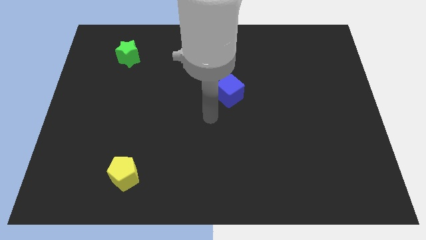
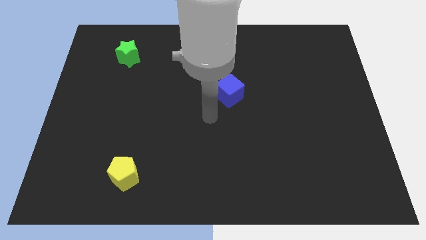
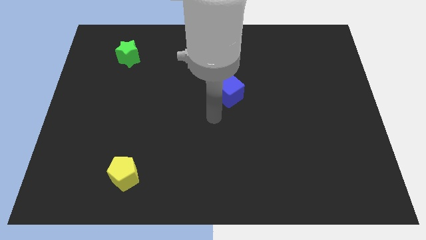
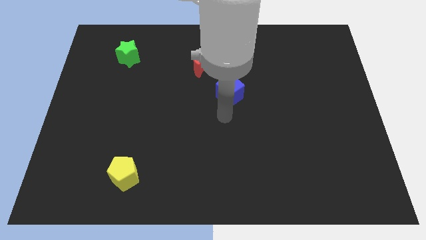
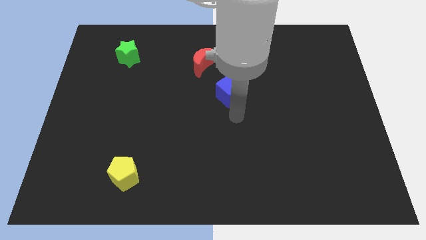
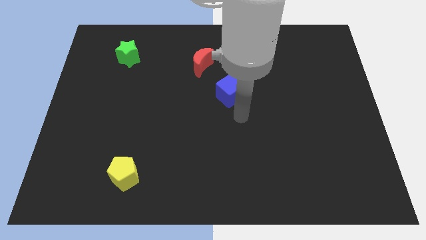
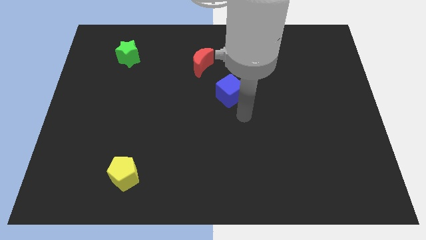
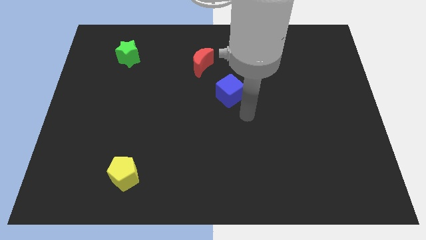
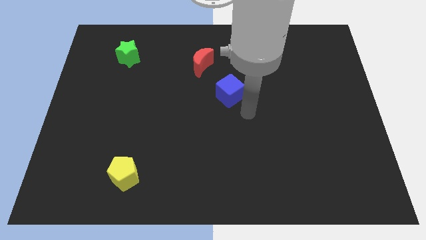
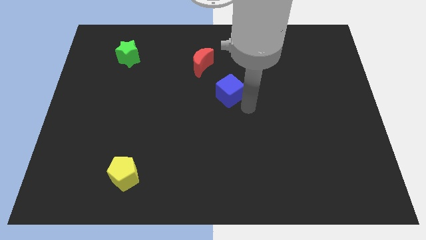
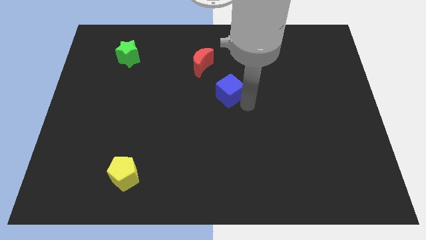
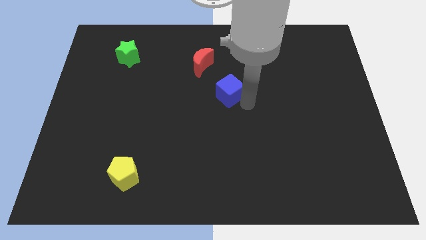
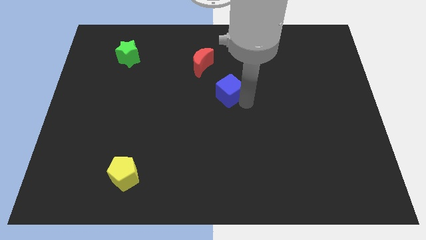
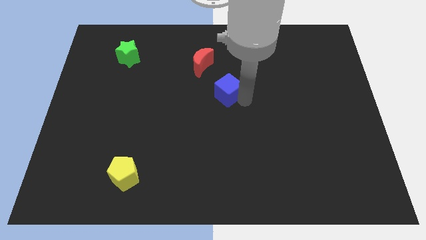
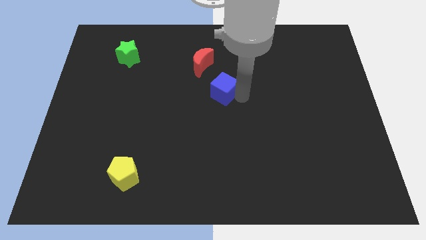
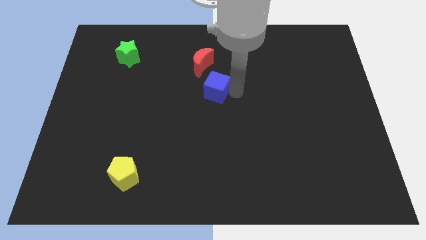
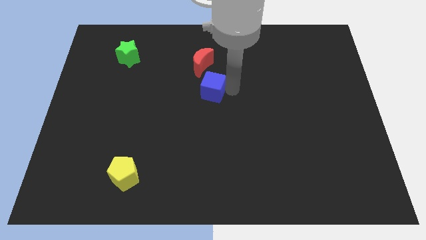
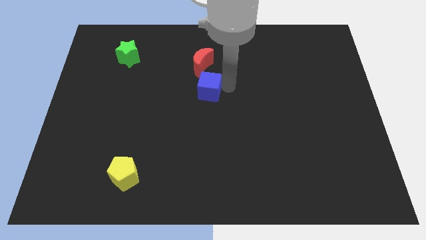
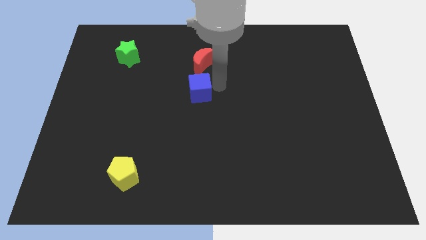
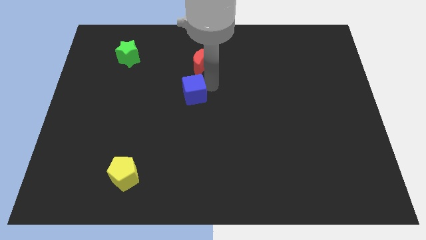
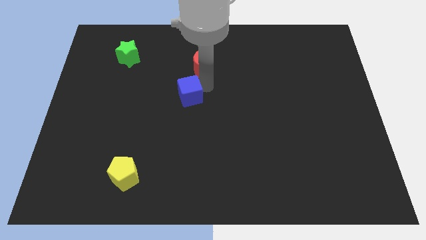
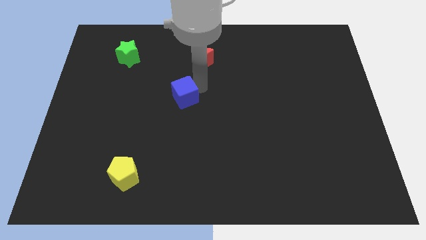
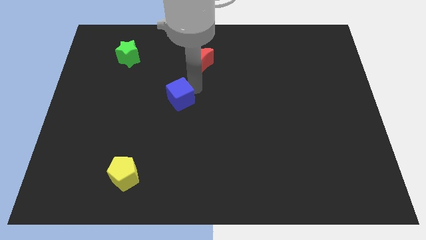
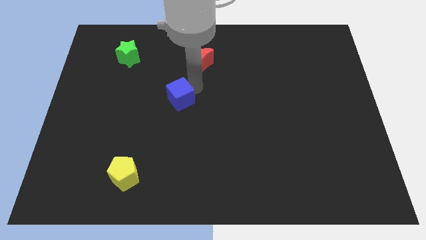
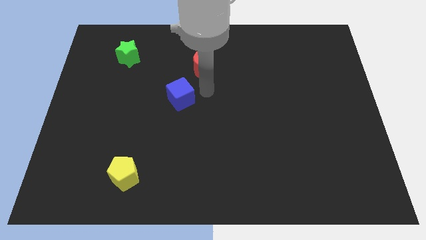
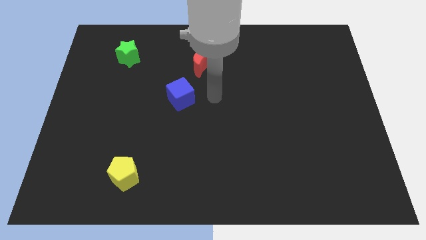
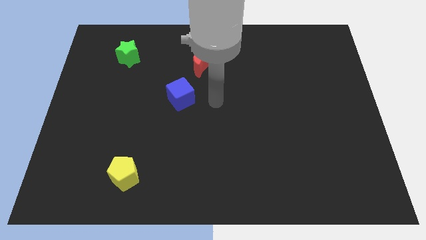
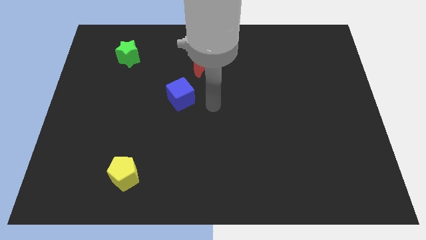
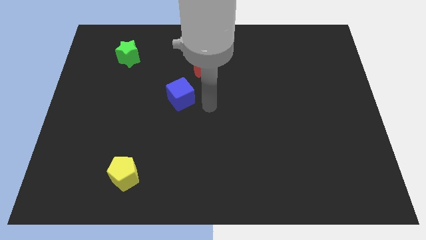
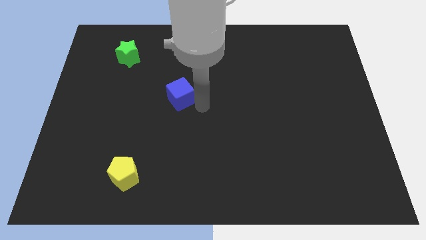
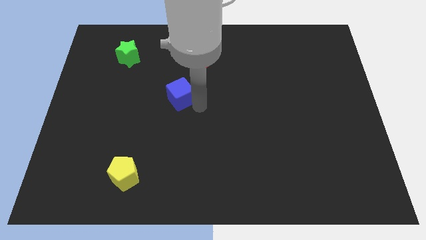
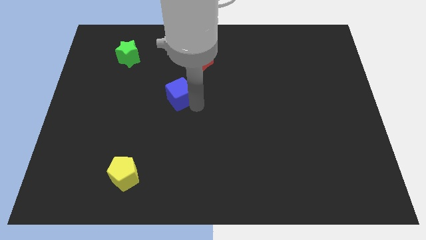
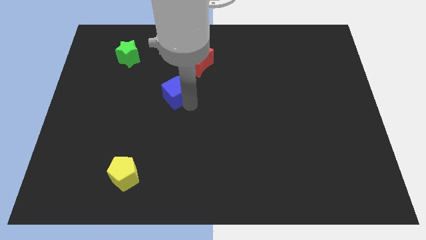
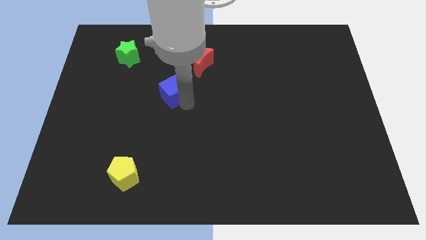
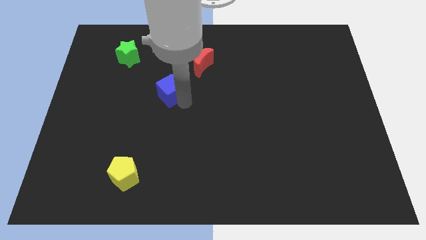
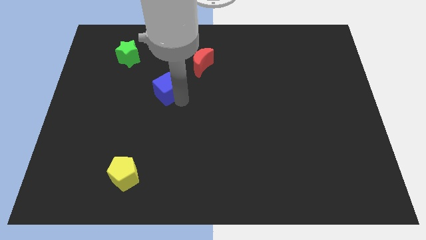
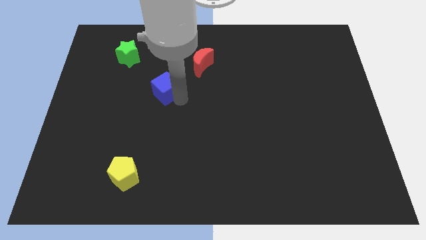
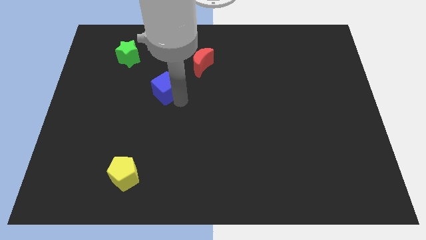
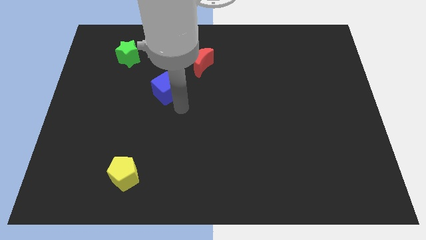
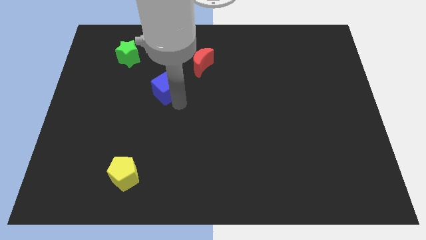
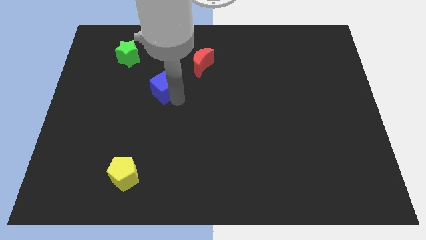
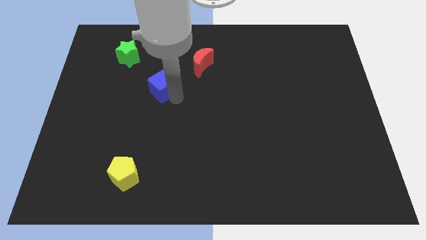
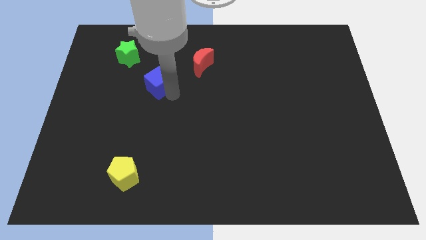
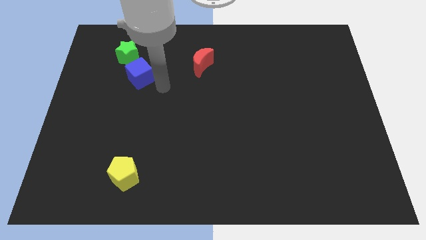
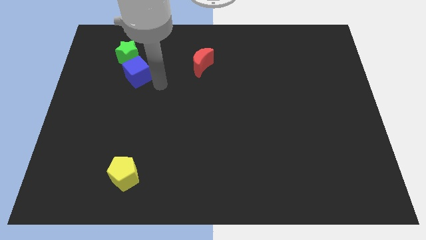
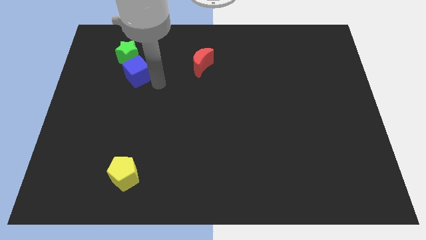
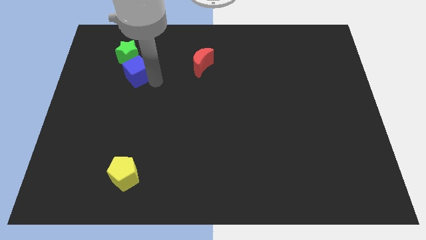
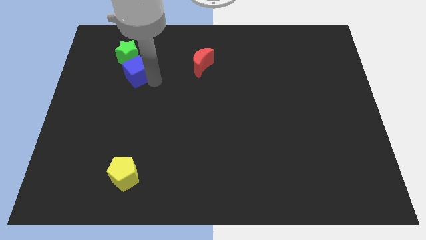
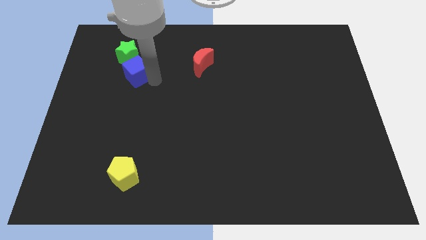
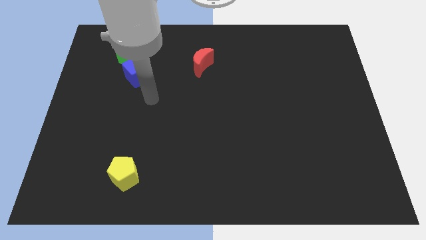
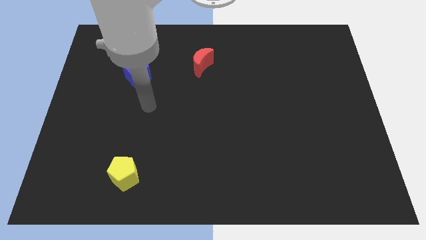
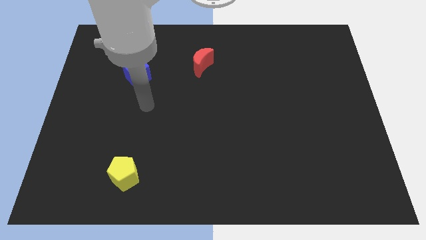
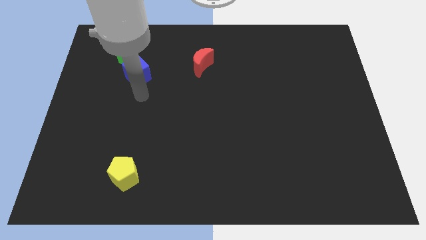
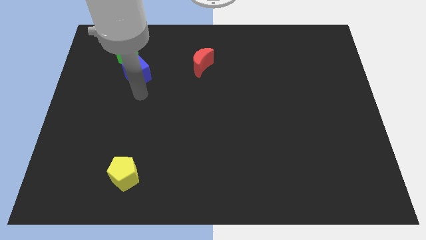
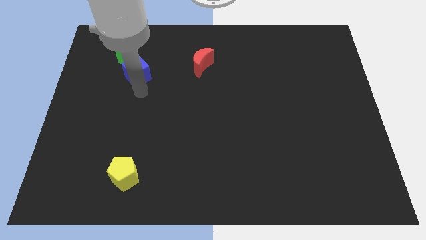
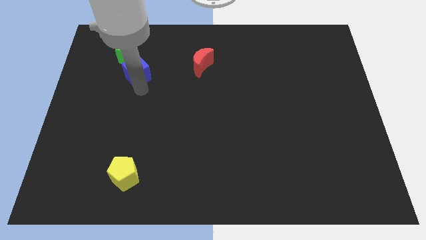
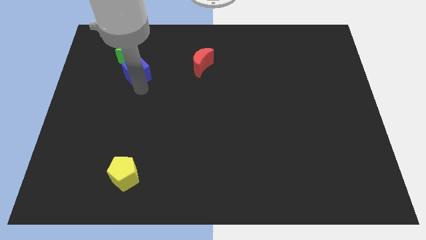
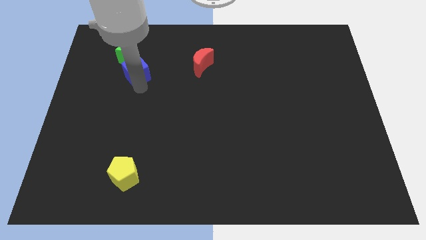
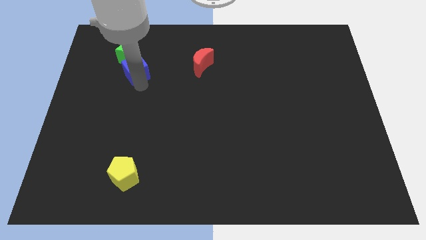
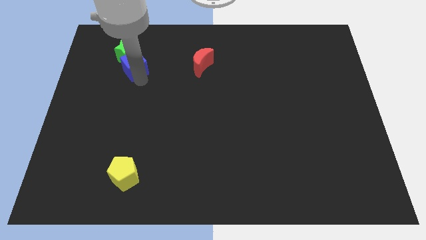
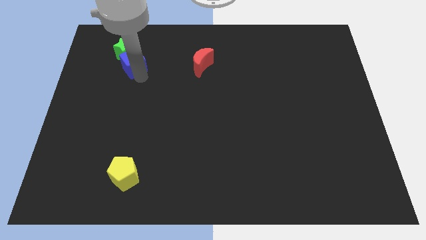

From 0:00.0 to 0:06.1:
put the blue cube close to the star

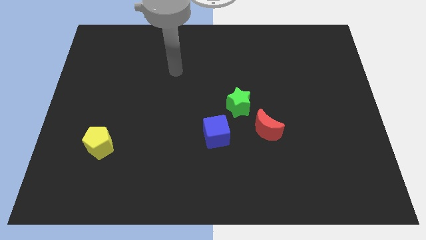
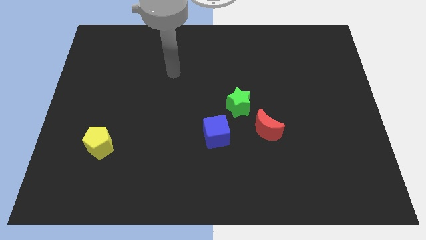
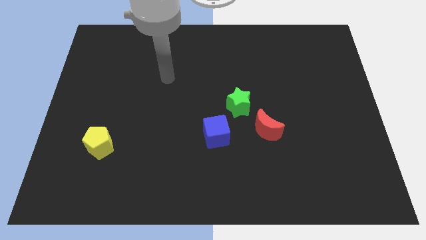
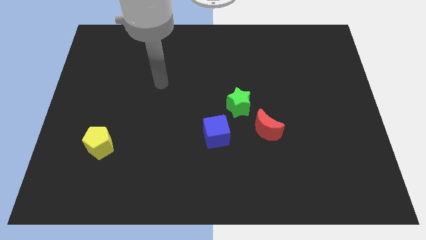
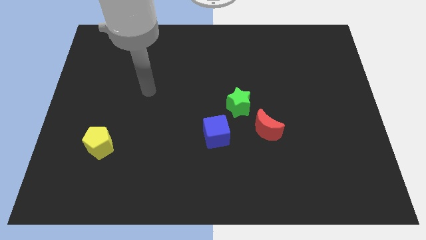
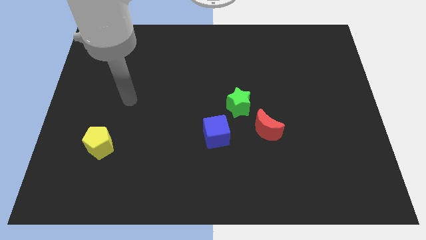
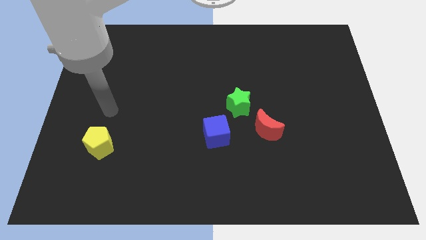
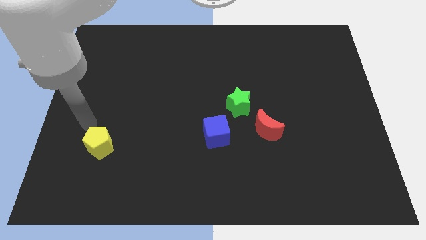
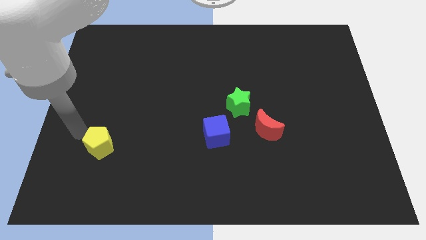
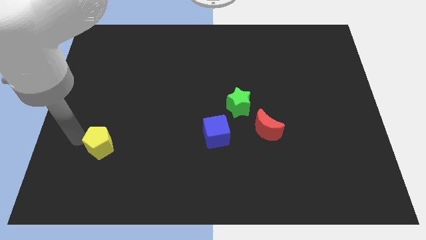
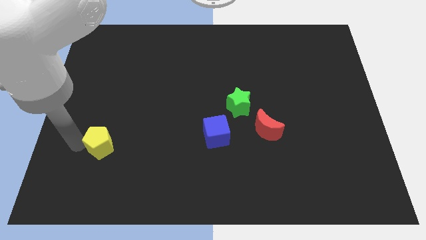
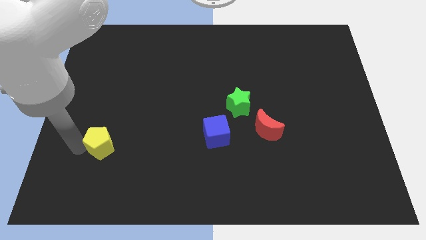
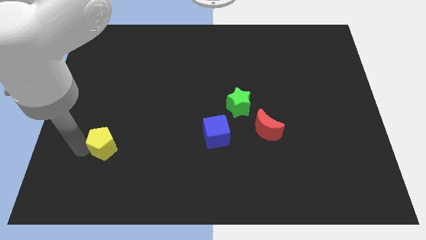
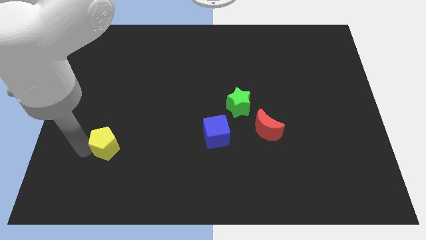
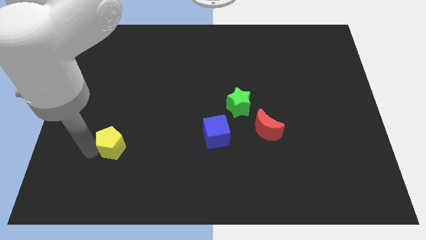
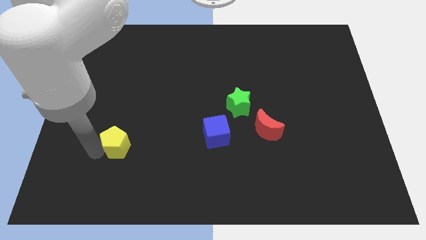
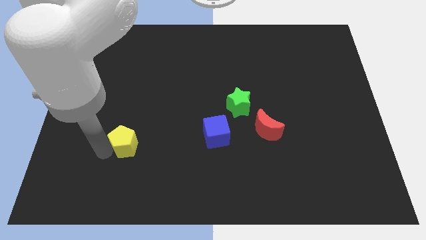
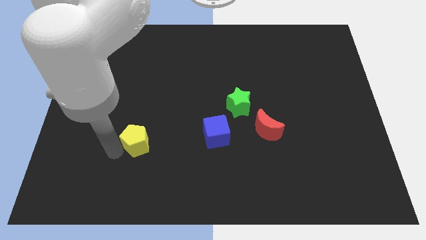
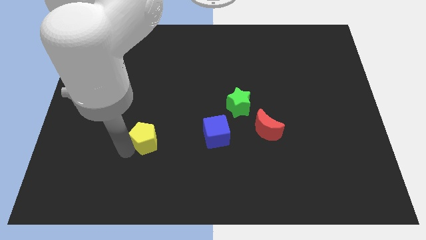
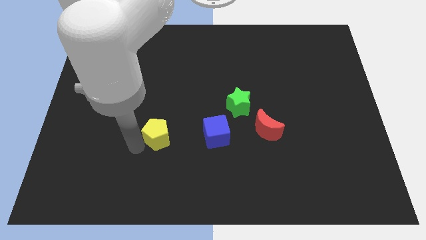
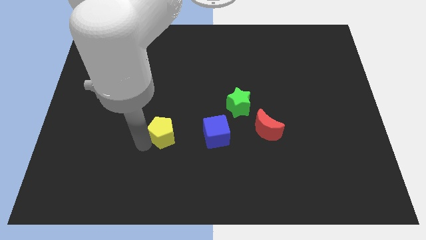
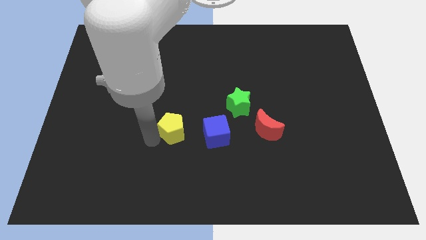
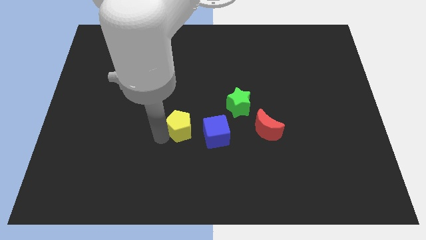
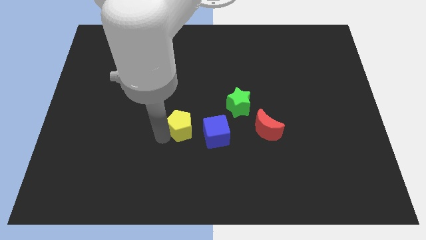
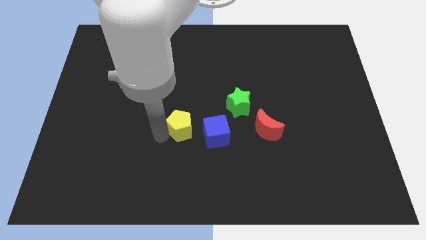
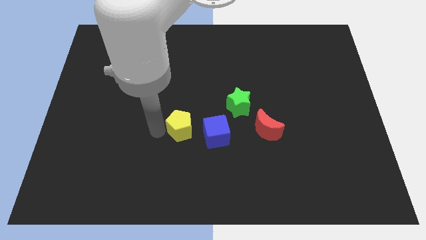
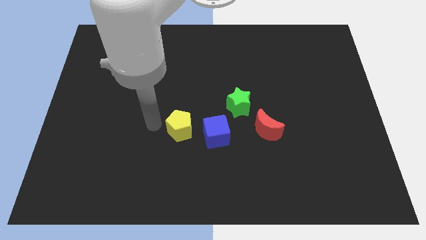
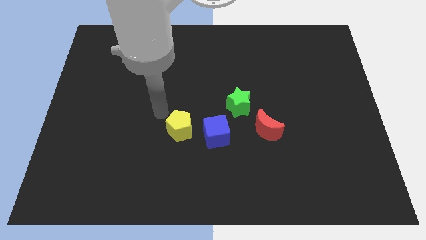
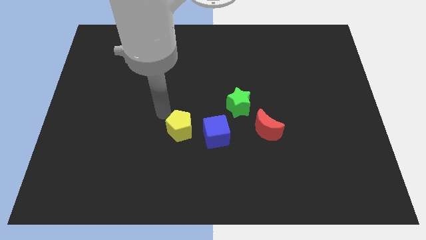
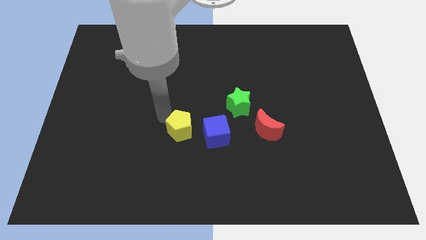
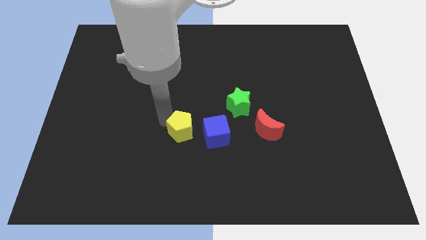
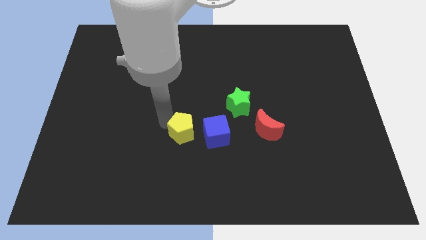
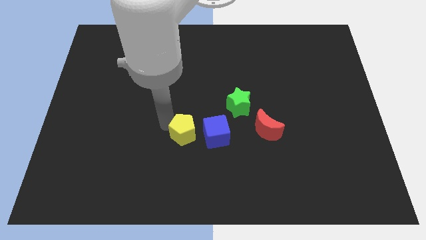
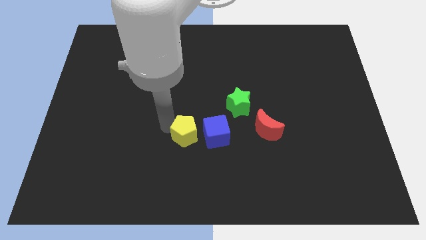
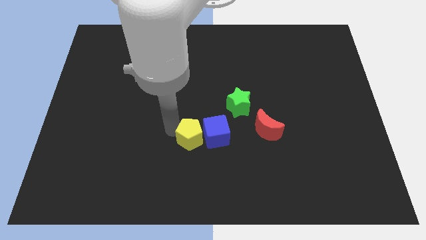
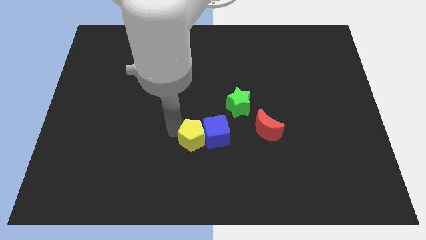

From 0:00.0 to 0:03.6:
put the pentagon to the cube
